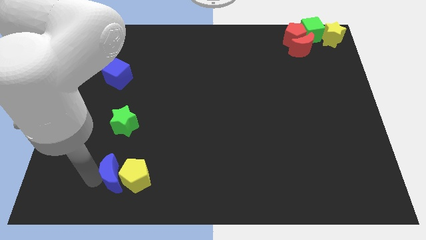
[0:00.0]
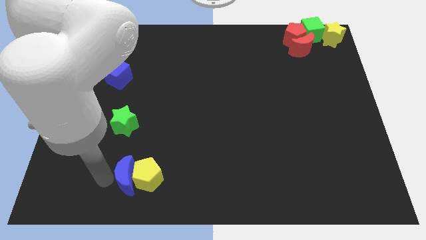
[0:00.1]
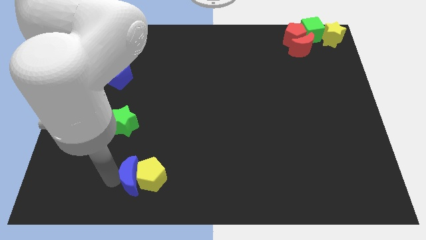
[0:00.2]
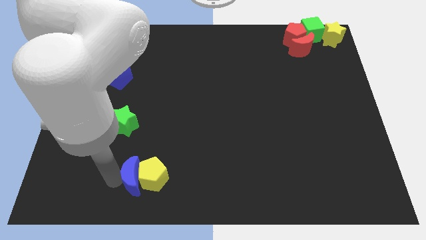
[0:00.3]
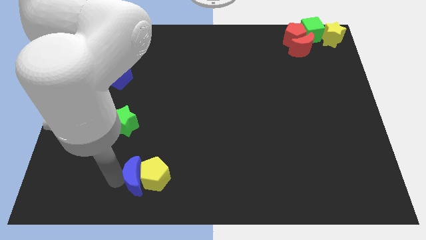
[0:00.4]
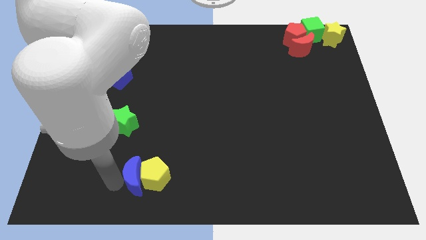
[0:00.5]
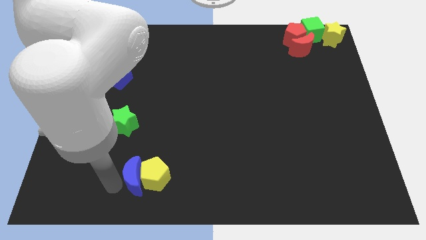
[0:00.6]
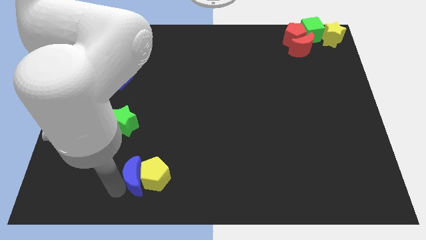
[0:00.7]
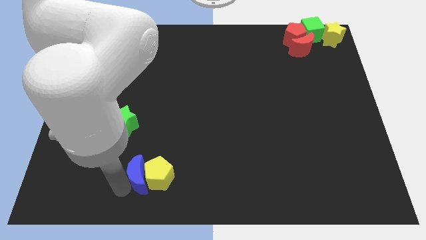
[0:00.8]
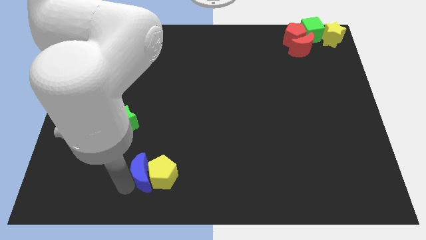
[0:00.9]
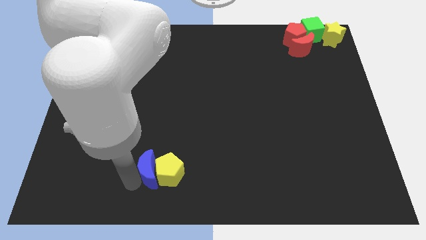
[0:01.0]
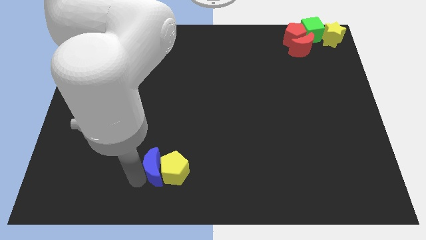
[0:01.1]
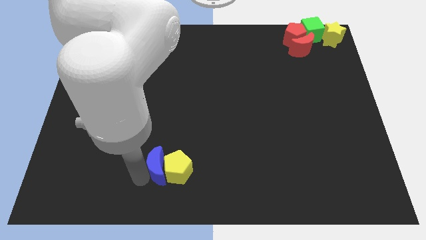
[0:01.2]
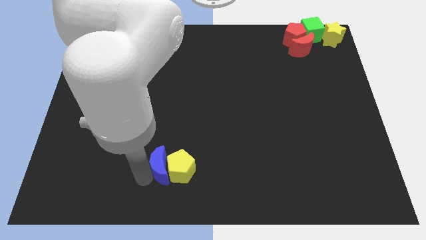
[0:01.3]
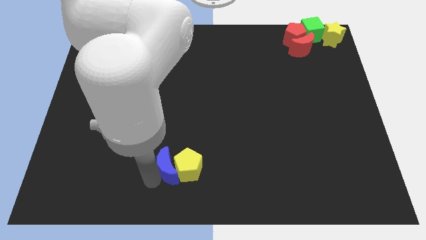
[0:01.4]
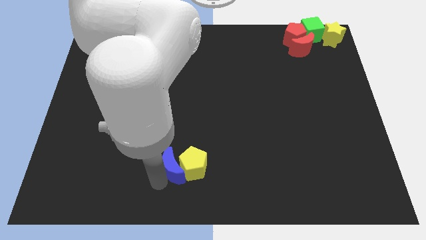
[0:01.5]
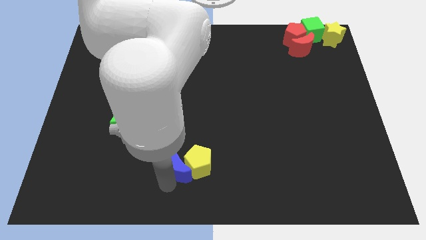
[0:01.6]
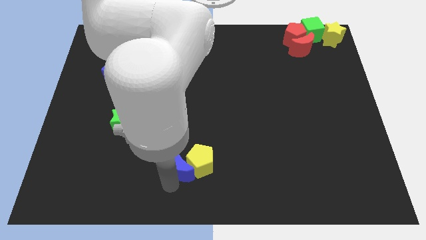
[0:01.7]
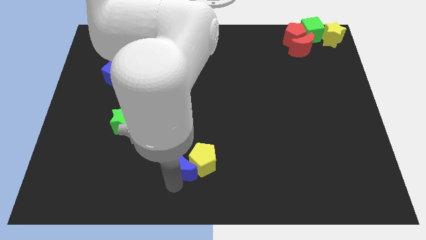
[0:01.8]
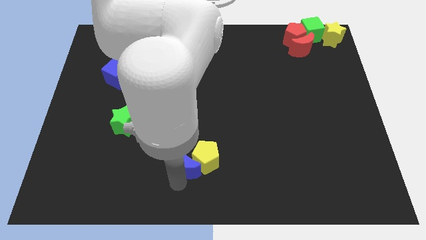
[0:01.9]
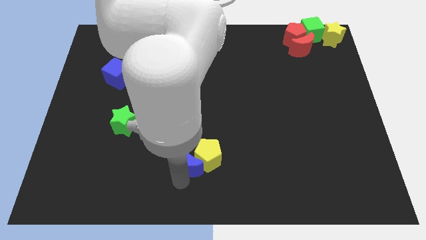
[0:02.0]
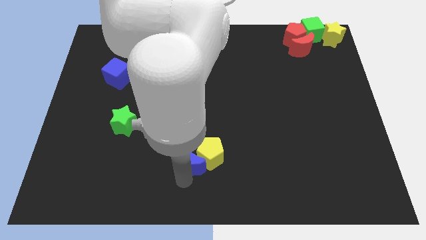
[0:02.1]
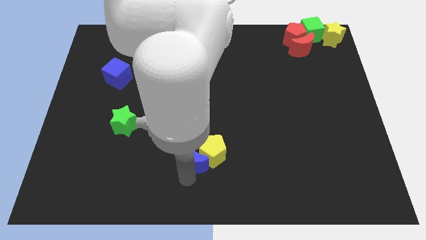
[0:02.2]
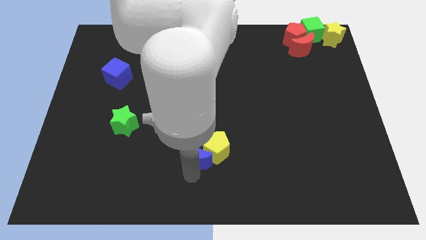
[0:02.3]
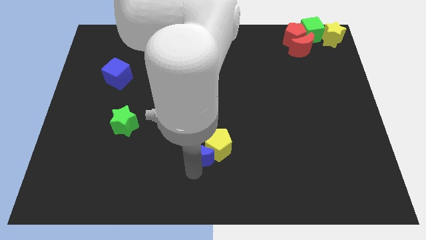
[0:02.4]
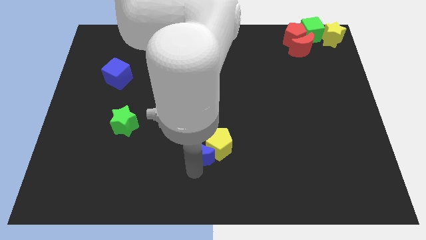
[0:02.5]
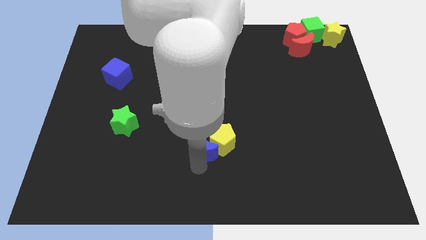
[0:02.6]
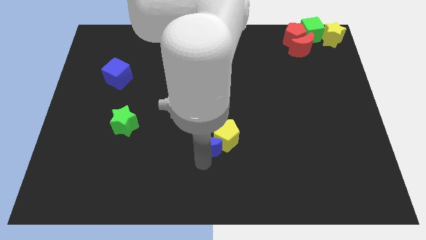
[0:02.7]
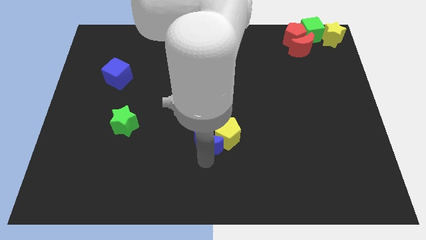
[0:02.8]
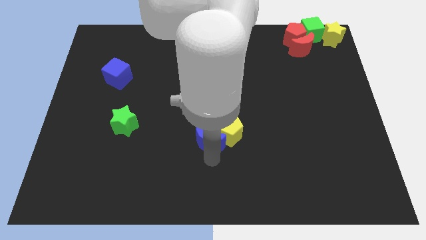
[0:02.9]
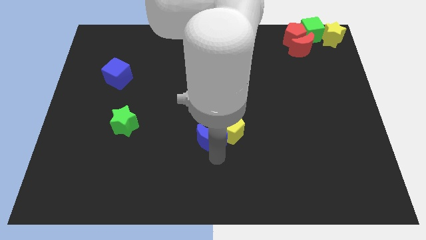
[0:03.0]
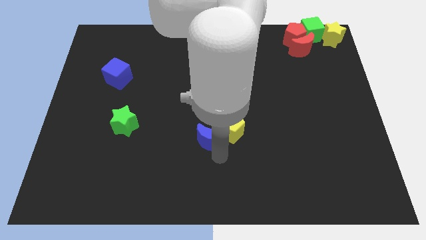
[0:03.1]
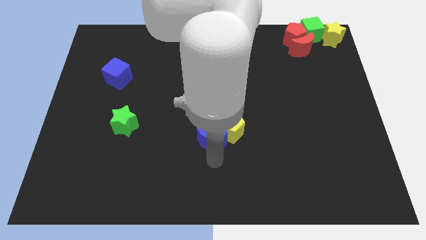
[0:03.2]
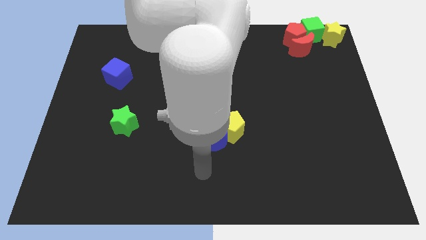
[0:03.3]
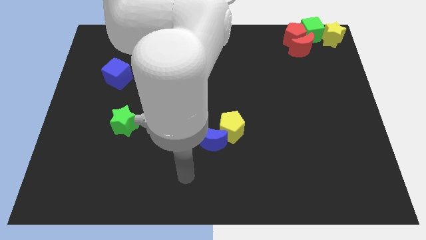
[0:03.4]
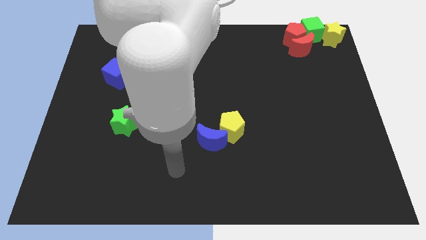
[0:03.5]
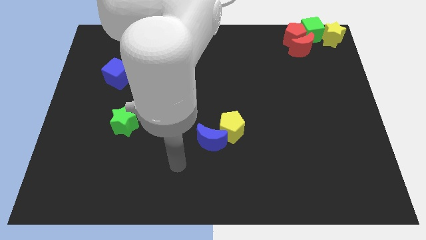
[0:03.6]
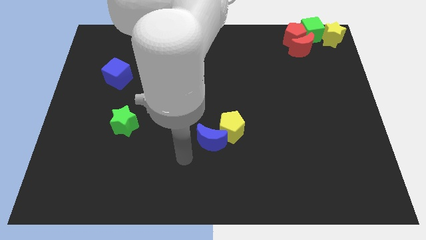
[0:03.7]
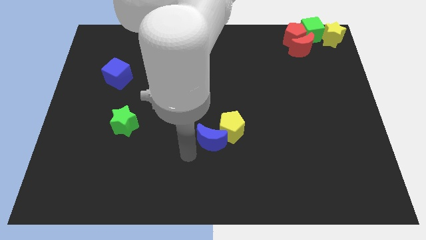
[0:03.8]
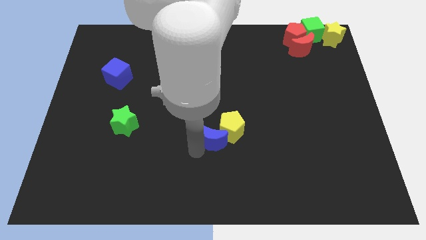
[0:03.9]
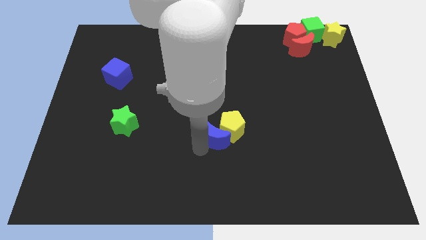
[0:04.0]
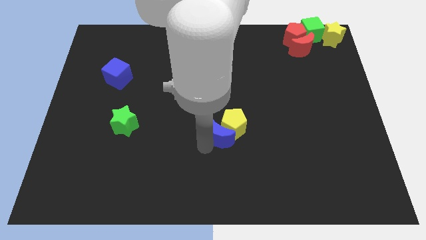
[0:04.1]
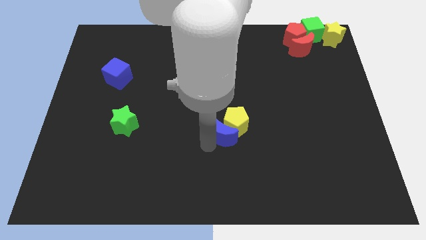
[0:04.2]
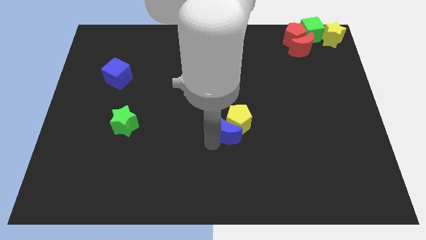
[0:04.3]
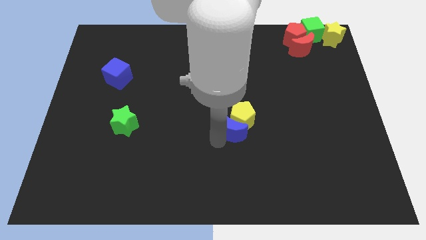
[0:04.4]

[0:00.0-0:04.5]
put the blue moon and yellow pentagon horizontally right to the green star

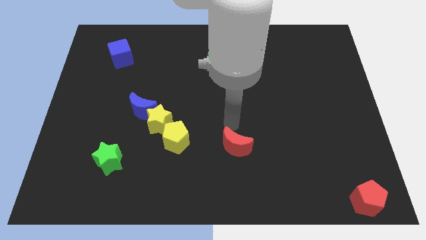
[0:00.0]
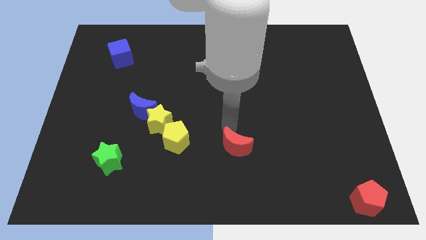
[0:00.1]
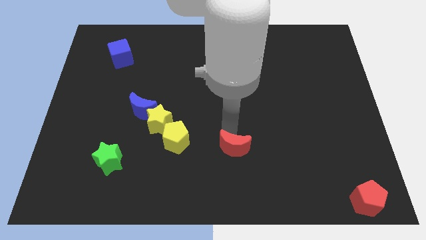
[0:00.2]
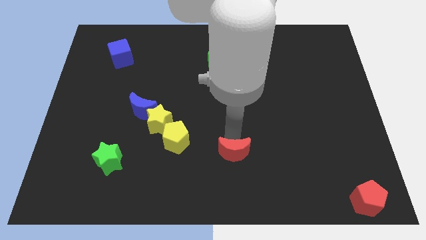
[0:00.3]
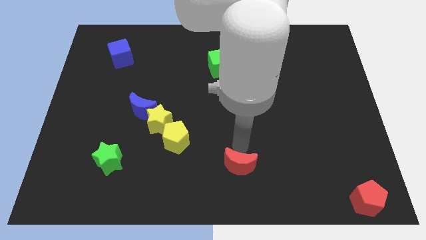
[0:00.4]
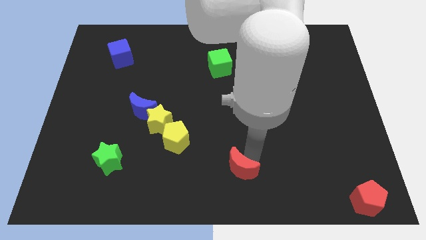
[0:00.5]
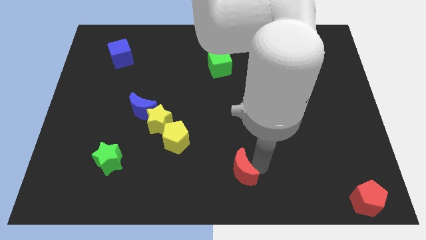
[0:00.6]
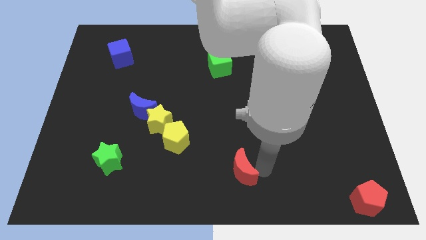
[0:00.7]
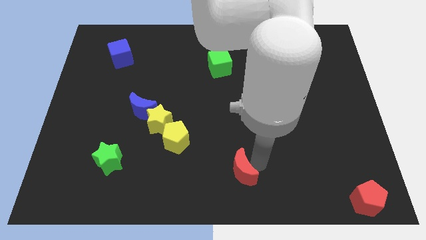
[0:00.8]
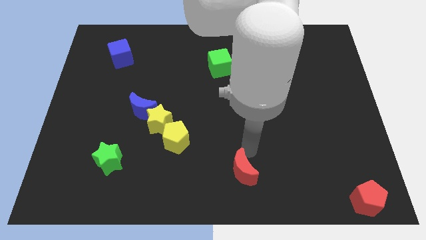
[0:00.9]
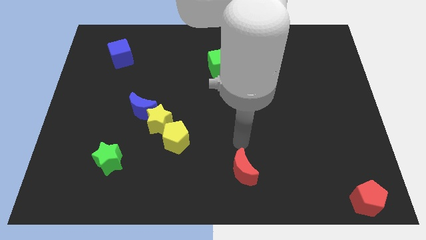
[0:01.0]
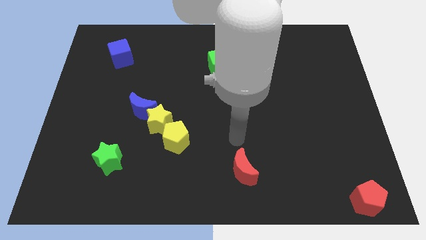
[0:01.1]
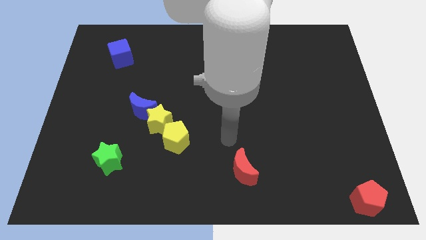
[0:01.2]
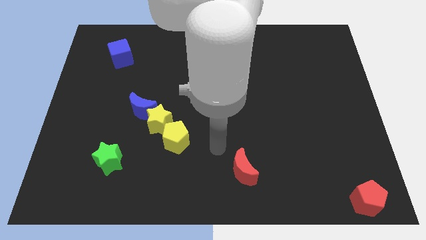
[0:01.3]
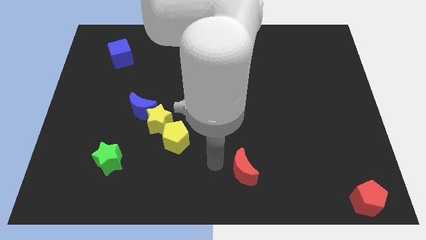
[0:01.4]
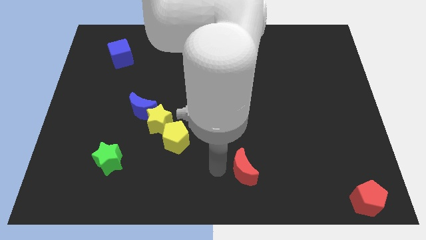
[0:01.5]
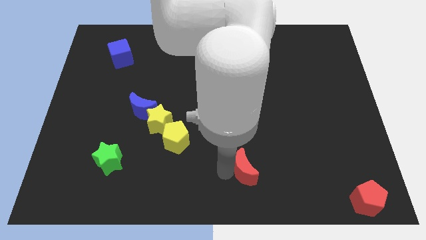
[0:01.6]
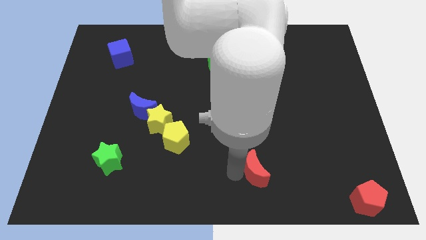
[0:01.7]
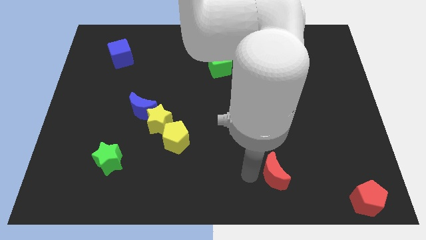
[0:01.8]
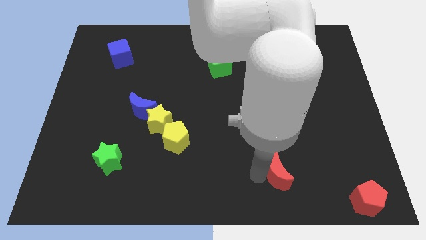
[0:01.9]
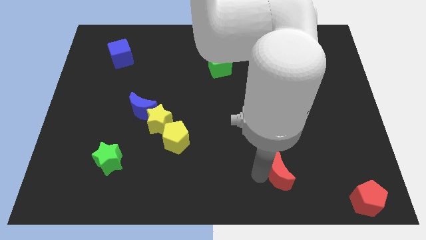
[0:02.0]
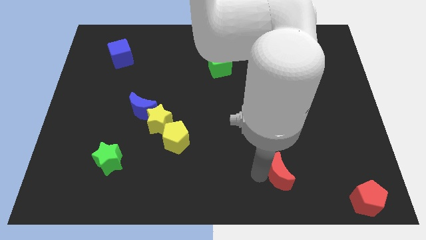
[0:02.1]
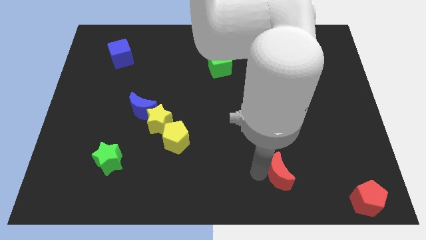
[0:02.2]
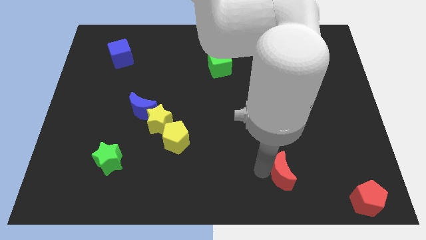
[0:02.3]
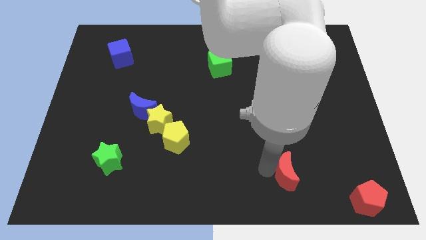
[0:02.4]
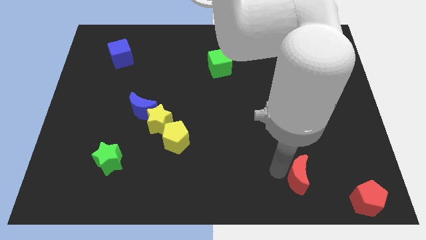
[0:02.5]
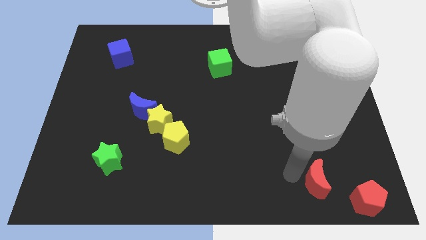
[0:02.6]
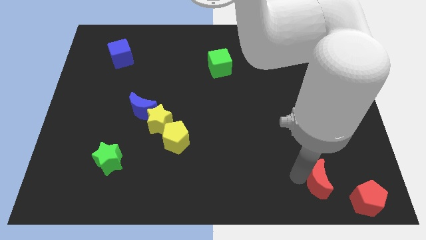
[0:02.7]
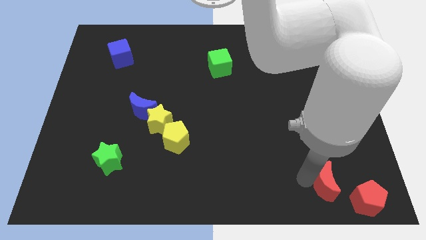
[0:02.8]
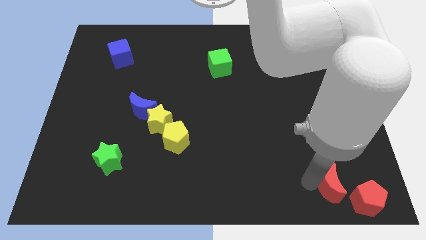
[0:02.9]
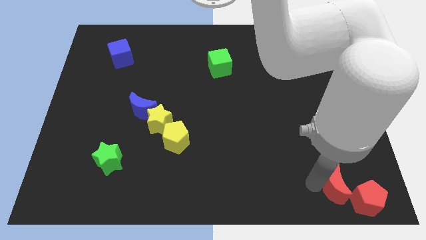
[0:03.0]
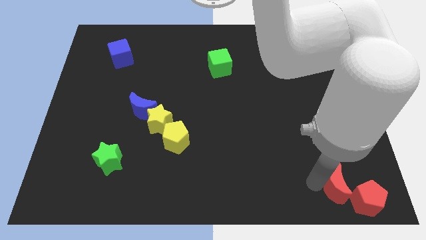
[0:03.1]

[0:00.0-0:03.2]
move the red moon on the top left of the red pentagon

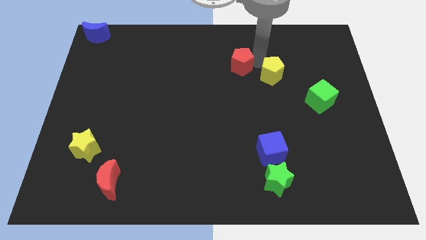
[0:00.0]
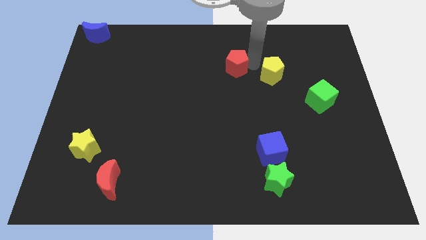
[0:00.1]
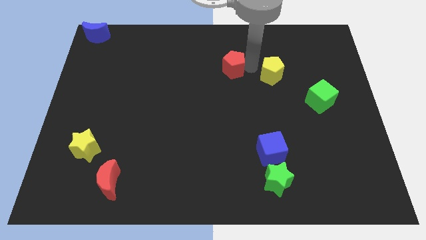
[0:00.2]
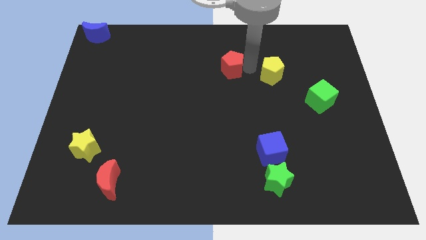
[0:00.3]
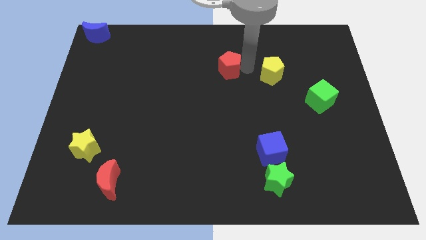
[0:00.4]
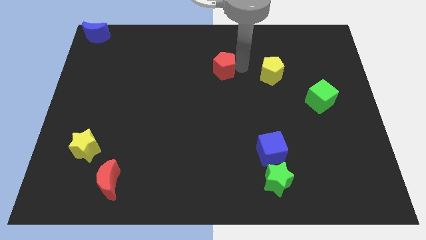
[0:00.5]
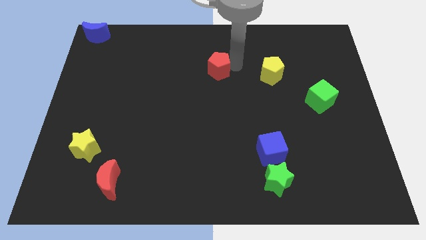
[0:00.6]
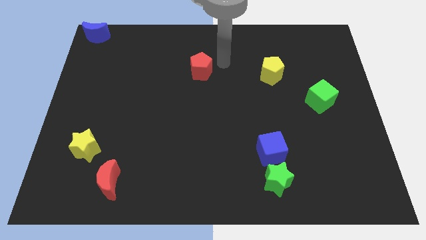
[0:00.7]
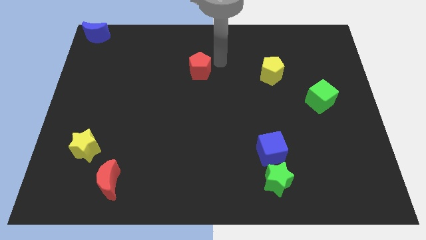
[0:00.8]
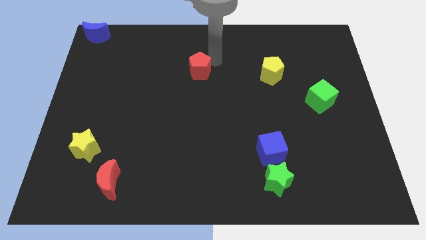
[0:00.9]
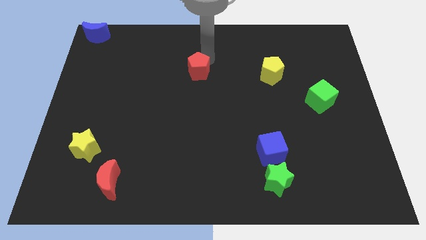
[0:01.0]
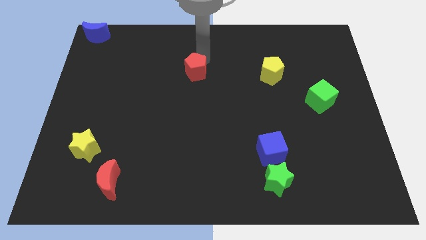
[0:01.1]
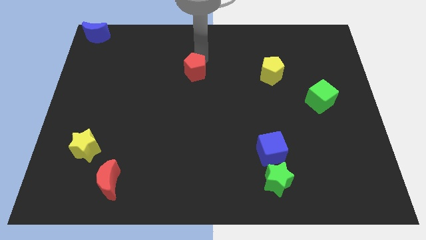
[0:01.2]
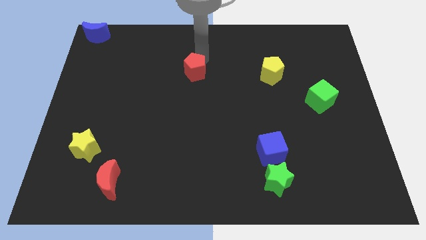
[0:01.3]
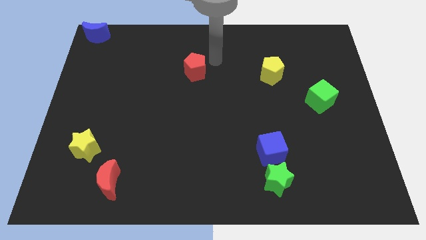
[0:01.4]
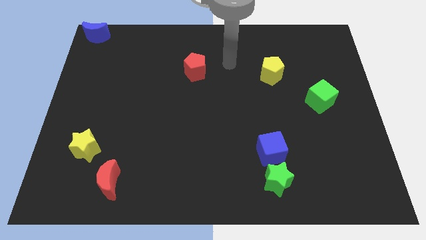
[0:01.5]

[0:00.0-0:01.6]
drag the red pentagon to the left
